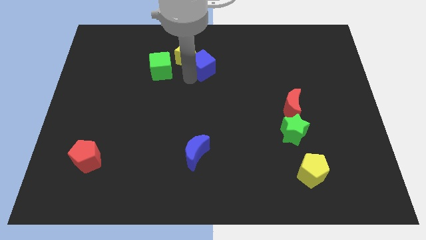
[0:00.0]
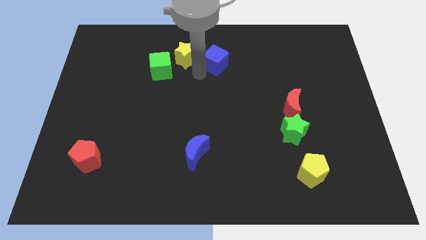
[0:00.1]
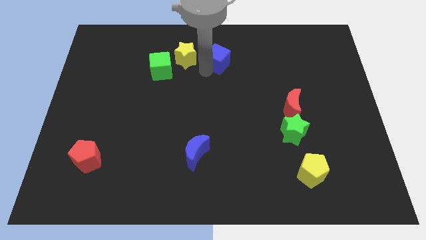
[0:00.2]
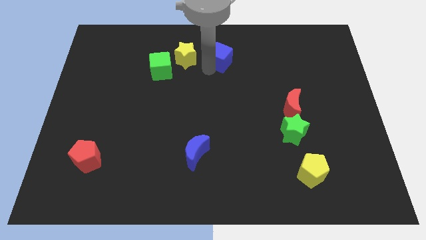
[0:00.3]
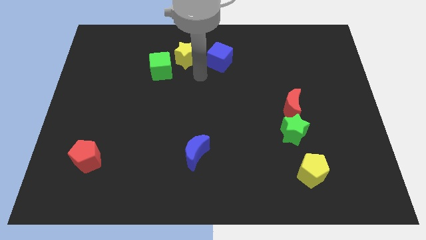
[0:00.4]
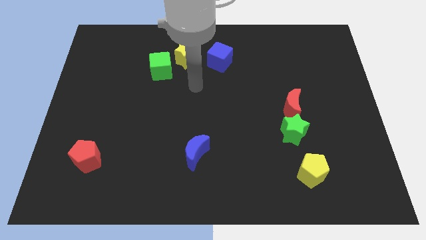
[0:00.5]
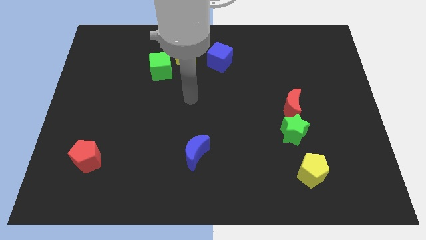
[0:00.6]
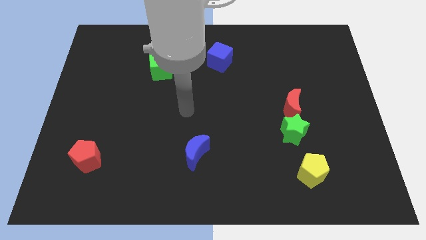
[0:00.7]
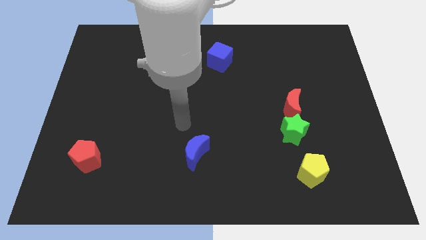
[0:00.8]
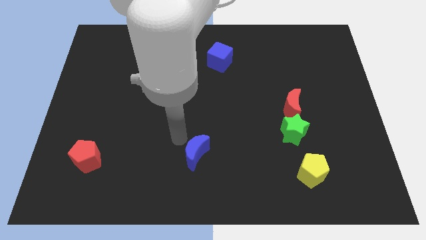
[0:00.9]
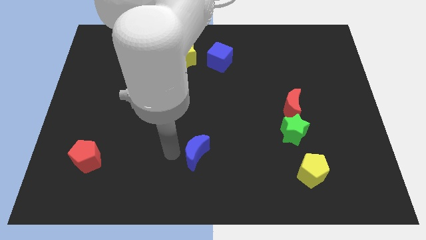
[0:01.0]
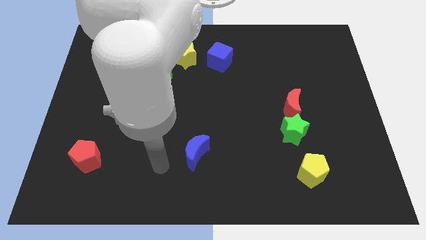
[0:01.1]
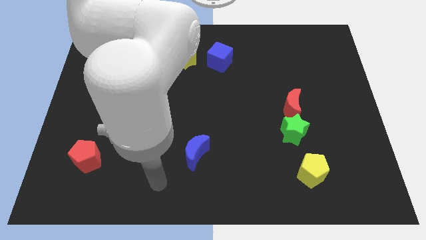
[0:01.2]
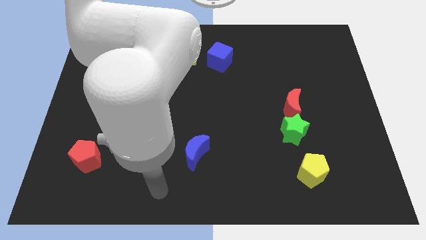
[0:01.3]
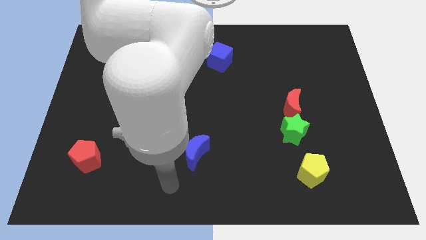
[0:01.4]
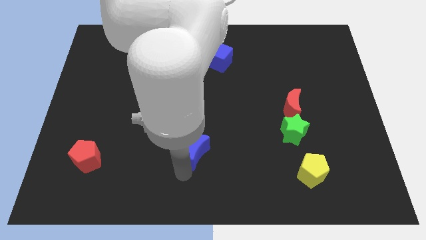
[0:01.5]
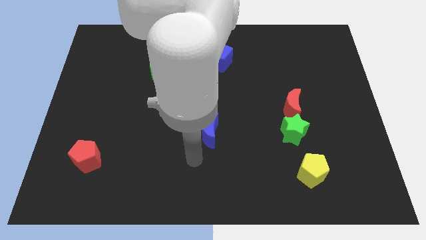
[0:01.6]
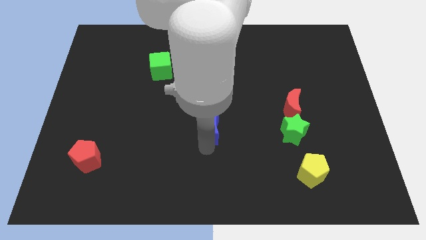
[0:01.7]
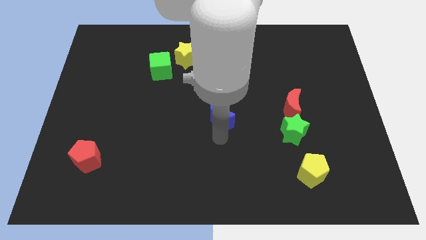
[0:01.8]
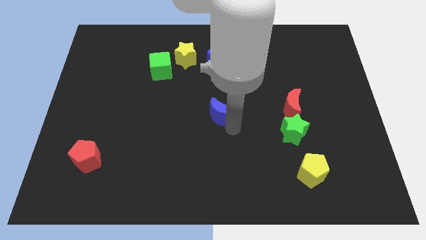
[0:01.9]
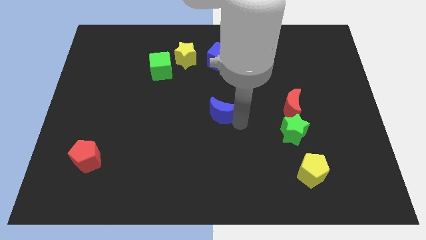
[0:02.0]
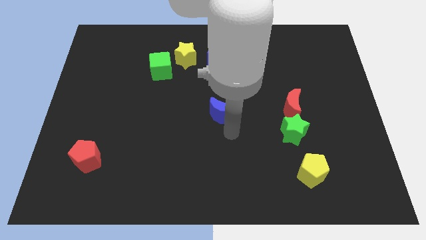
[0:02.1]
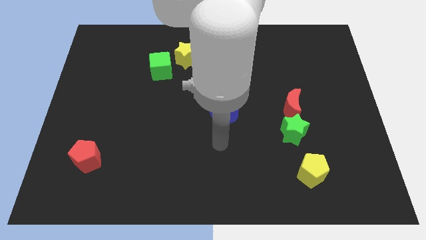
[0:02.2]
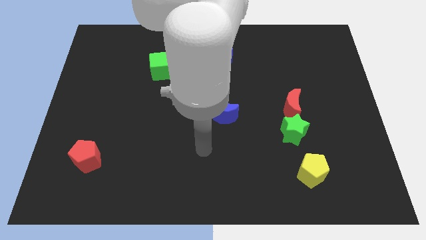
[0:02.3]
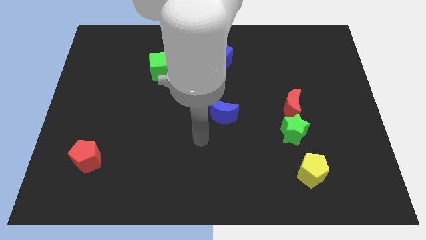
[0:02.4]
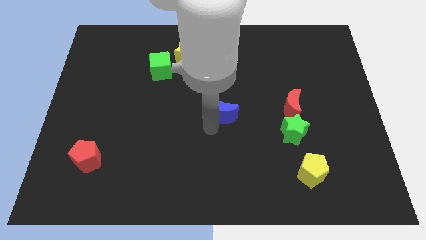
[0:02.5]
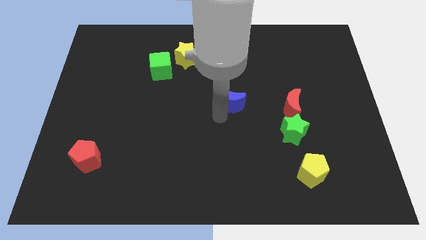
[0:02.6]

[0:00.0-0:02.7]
place the blue moon under the blue cube

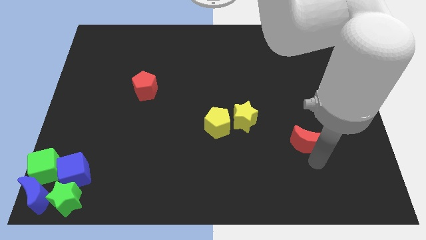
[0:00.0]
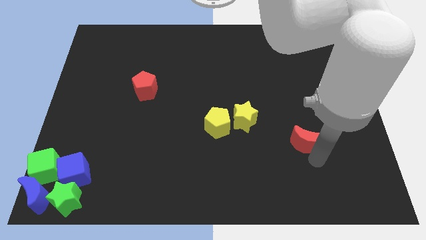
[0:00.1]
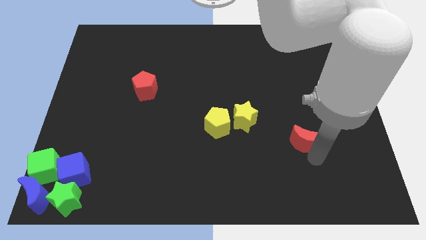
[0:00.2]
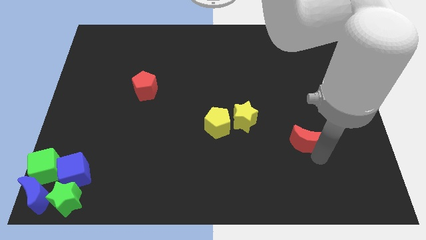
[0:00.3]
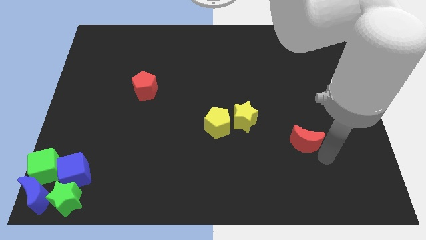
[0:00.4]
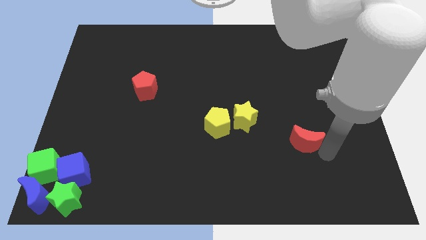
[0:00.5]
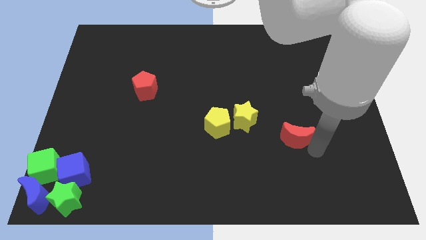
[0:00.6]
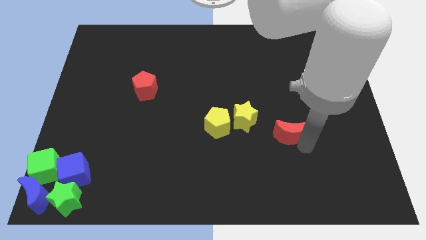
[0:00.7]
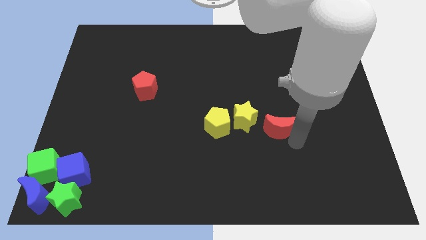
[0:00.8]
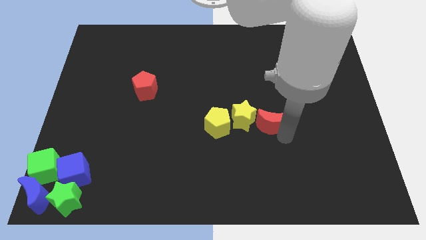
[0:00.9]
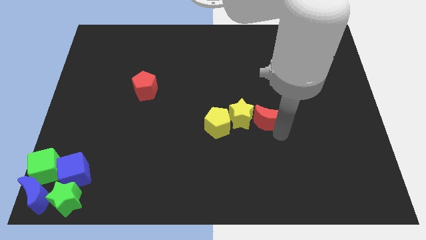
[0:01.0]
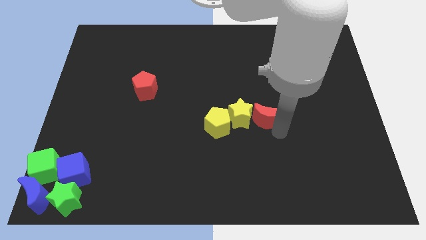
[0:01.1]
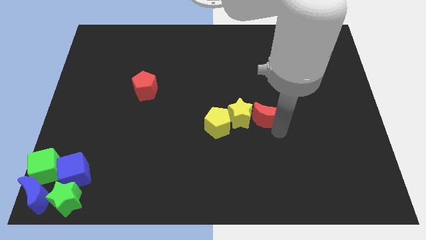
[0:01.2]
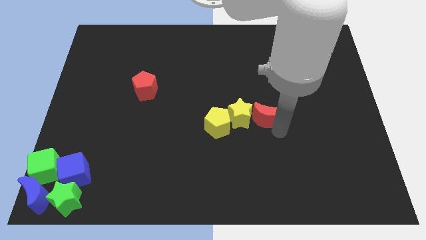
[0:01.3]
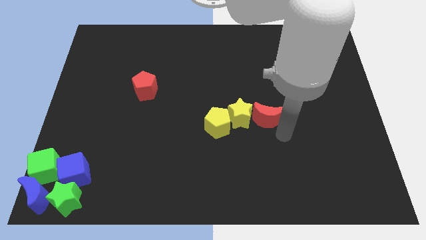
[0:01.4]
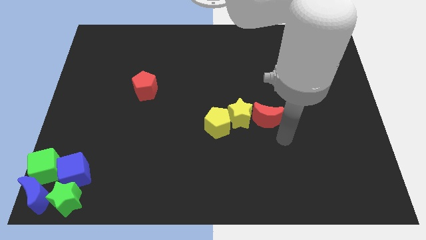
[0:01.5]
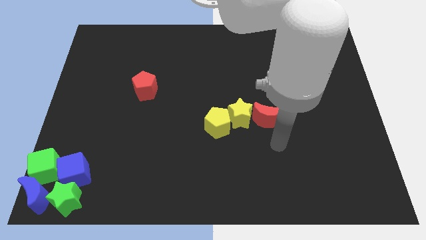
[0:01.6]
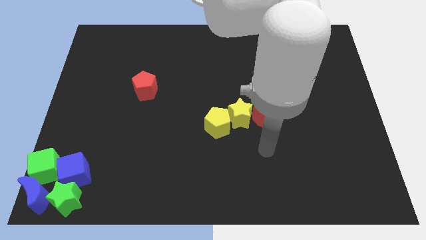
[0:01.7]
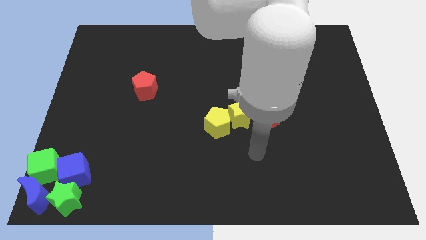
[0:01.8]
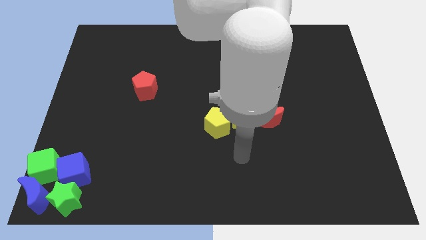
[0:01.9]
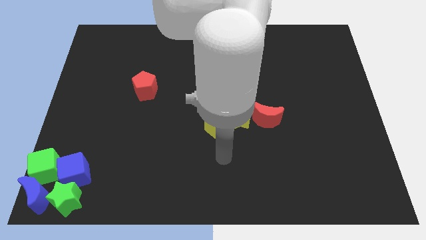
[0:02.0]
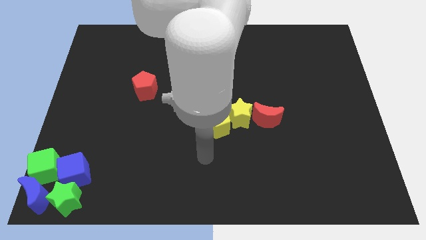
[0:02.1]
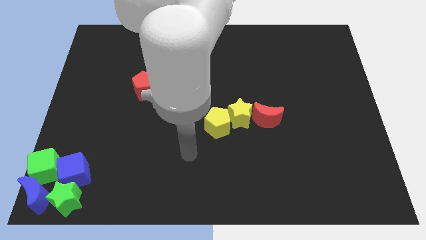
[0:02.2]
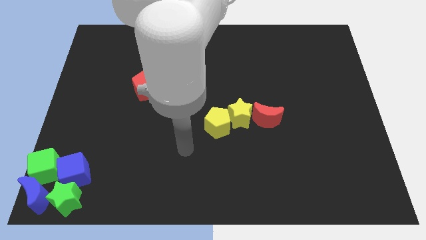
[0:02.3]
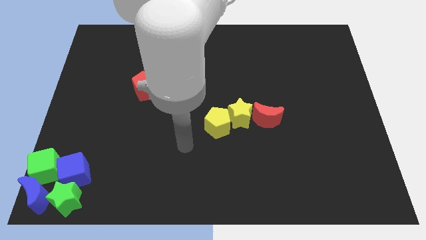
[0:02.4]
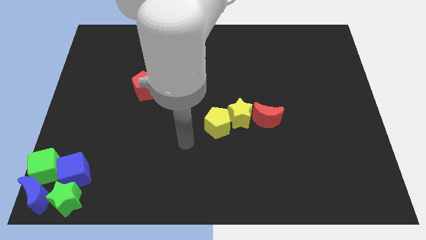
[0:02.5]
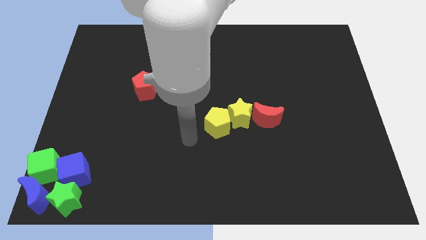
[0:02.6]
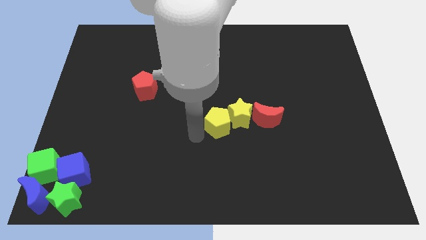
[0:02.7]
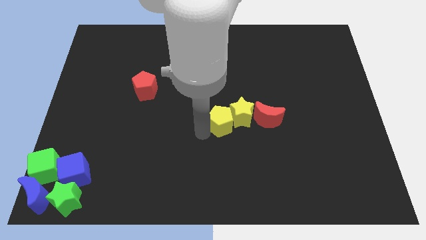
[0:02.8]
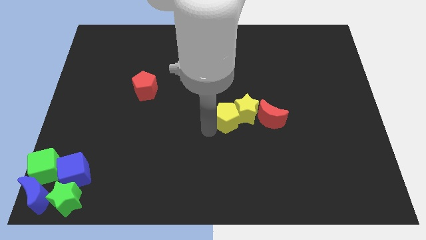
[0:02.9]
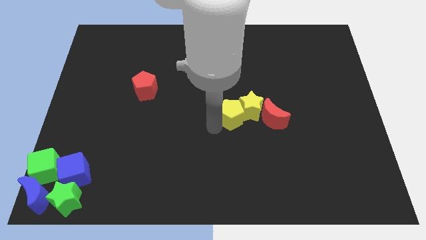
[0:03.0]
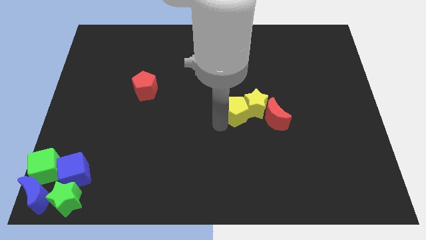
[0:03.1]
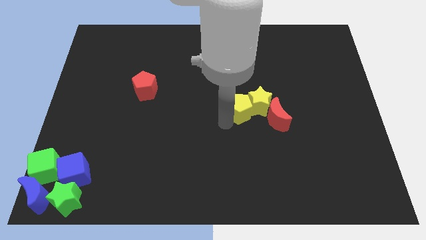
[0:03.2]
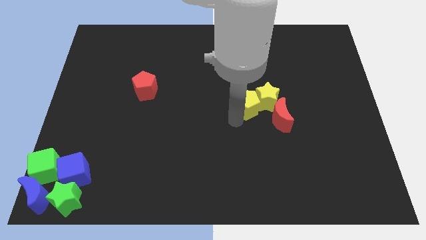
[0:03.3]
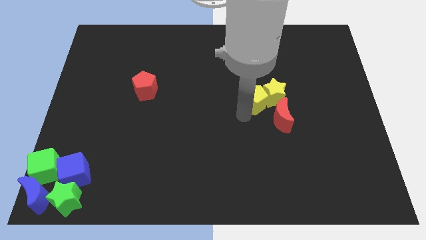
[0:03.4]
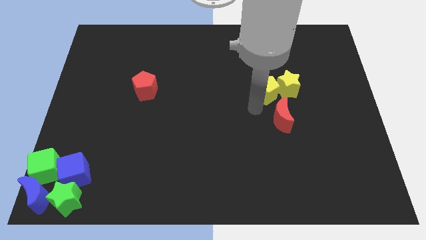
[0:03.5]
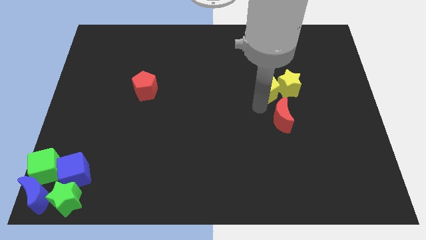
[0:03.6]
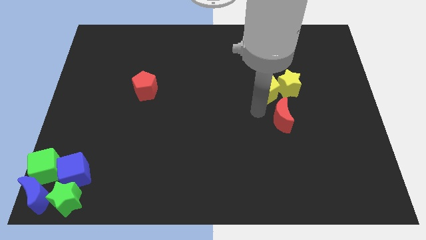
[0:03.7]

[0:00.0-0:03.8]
move yellow blocks above the red moon

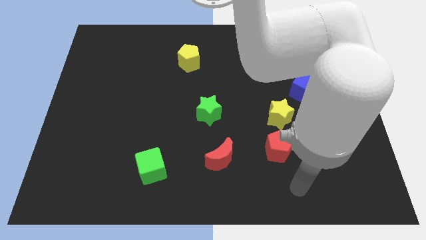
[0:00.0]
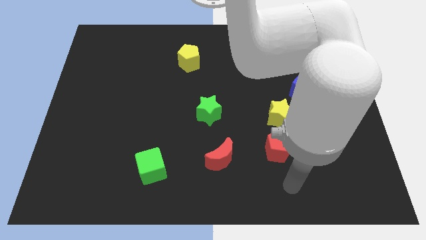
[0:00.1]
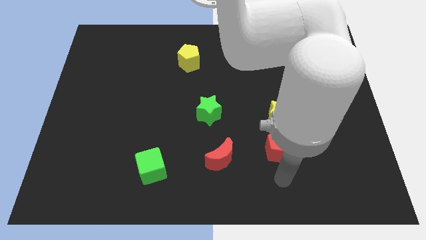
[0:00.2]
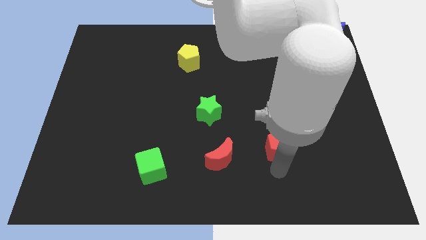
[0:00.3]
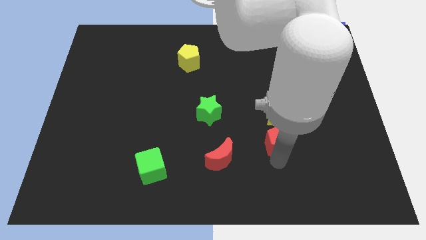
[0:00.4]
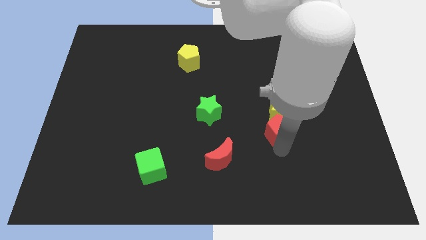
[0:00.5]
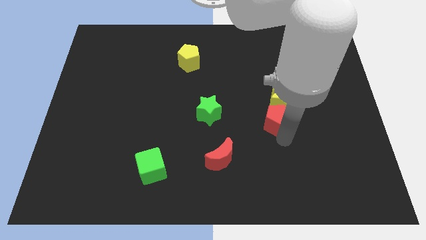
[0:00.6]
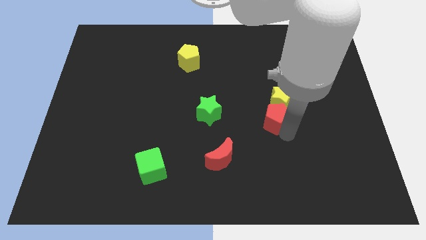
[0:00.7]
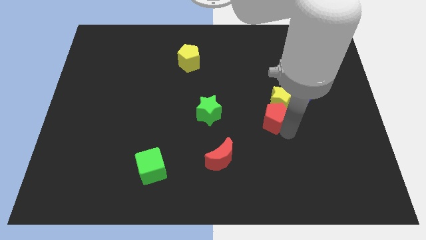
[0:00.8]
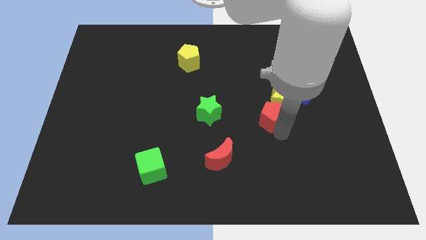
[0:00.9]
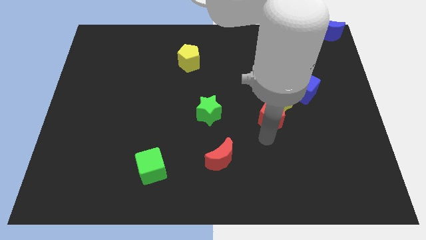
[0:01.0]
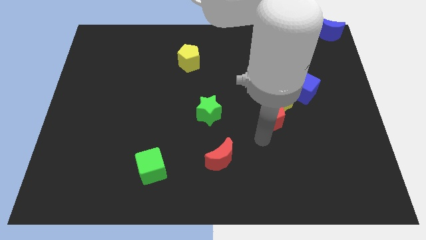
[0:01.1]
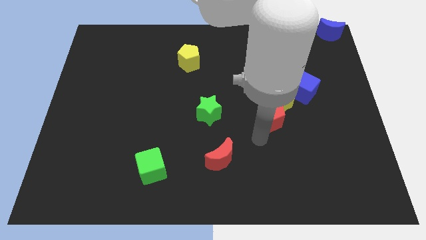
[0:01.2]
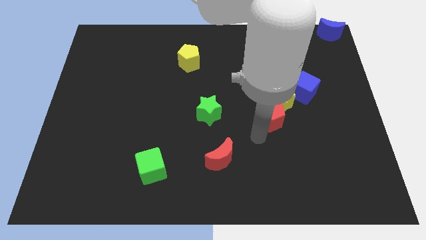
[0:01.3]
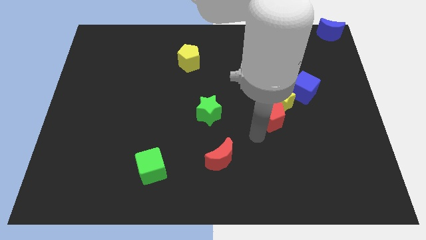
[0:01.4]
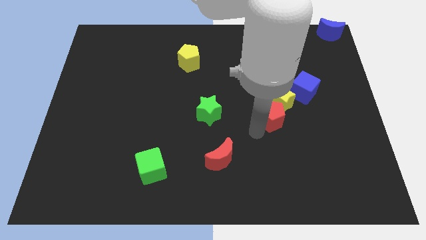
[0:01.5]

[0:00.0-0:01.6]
move red pentagon and yellow star slightly up

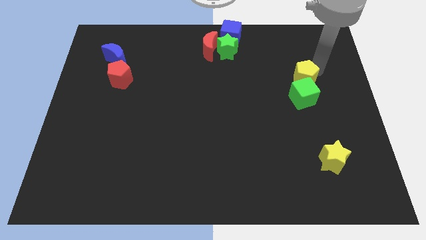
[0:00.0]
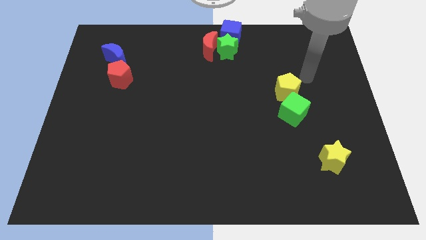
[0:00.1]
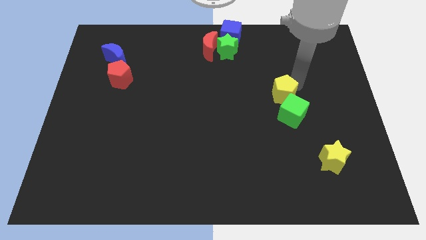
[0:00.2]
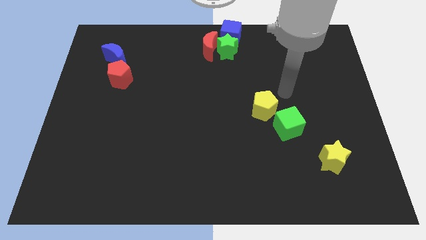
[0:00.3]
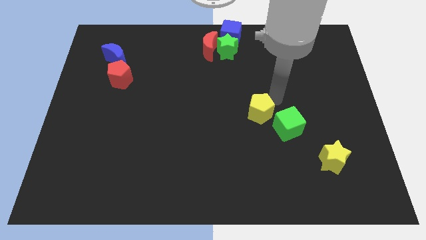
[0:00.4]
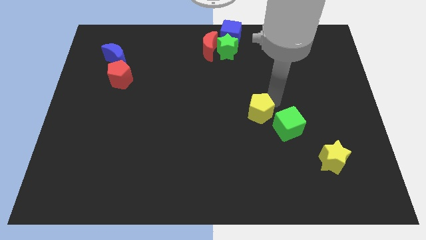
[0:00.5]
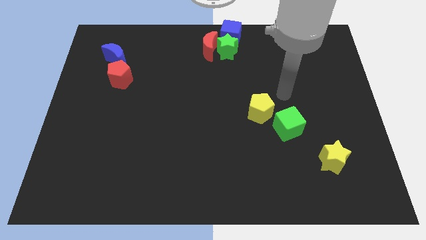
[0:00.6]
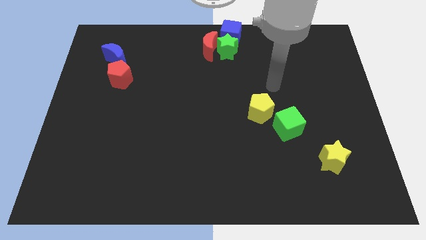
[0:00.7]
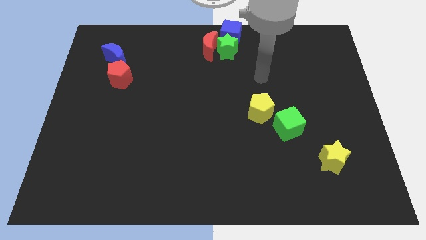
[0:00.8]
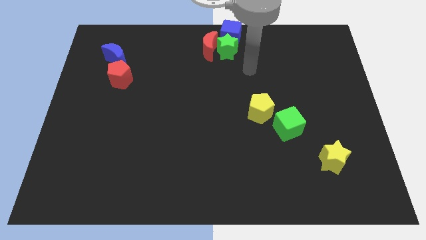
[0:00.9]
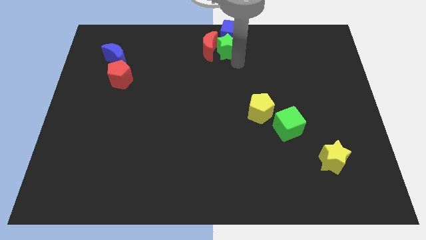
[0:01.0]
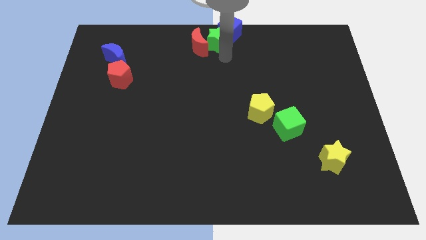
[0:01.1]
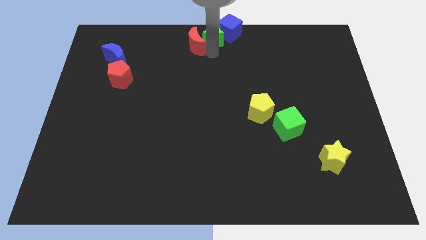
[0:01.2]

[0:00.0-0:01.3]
push the yellow pentagon slightly in diagonal position to the bottom side of the board
